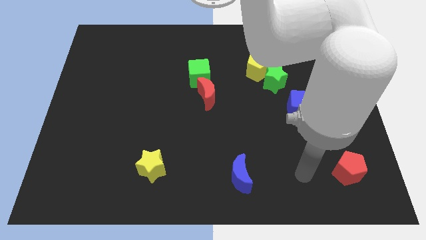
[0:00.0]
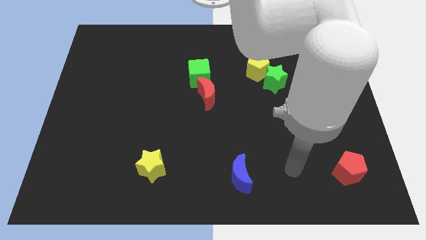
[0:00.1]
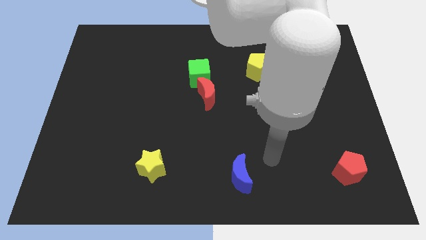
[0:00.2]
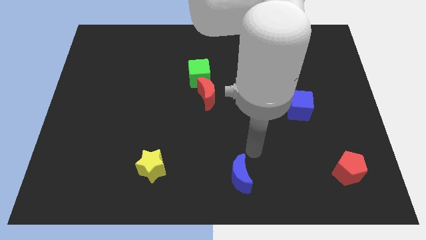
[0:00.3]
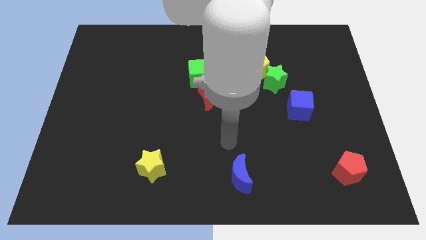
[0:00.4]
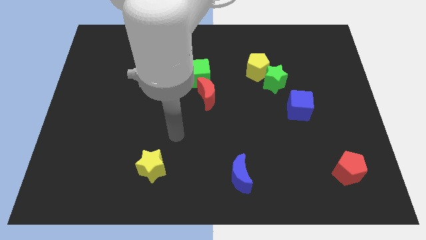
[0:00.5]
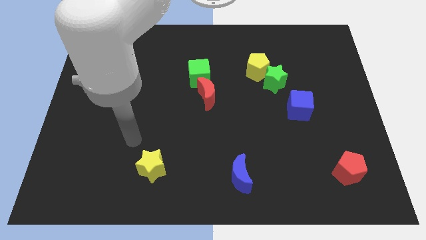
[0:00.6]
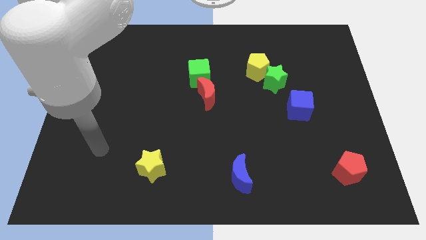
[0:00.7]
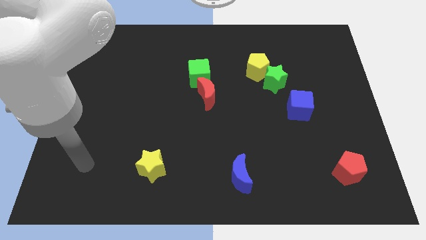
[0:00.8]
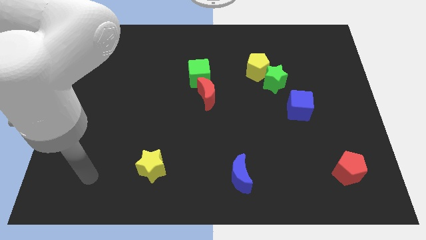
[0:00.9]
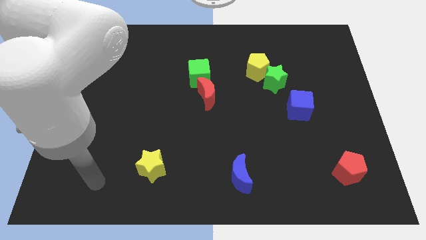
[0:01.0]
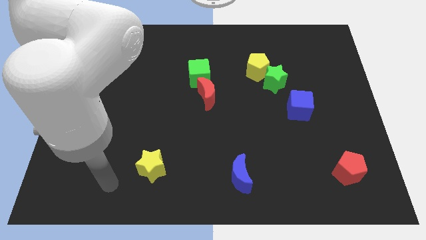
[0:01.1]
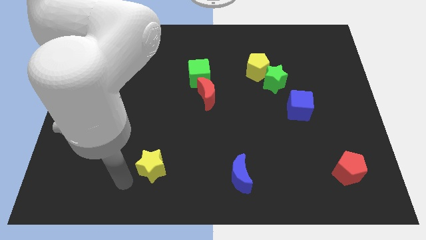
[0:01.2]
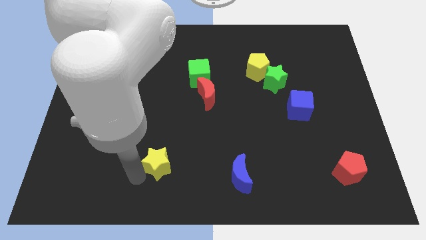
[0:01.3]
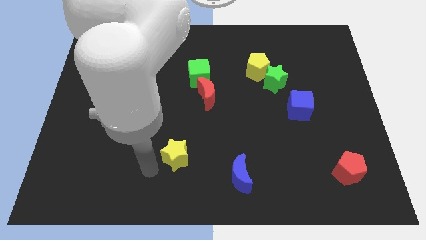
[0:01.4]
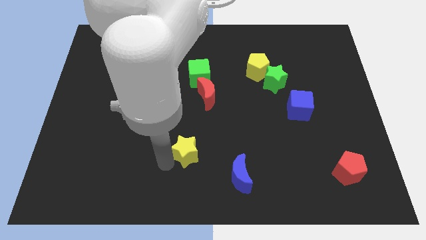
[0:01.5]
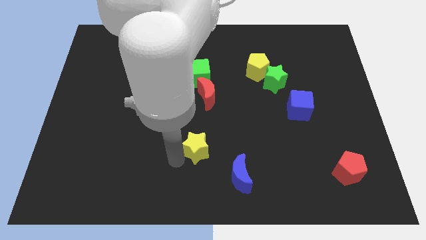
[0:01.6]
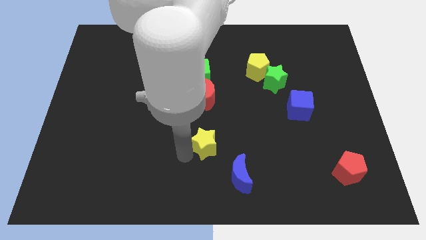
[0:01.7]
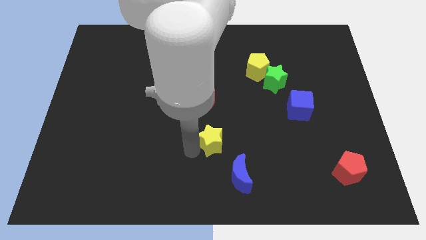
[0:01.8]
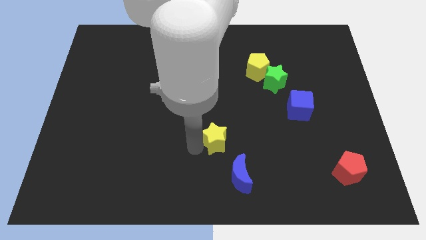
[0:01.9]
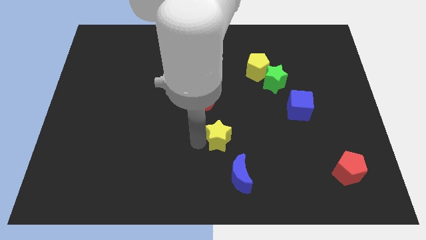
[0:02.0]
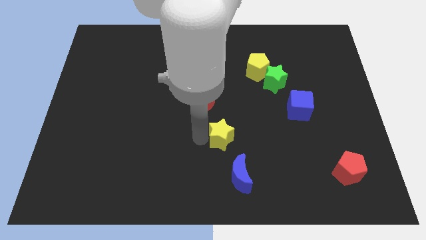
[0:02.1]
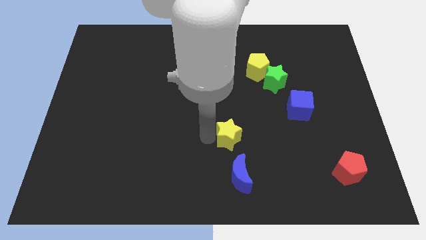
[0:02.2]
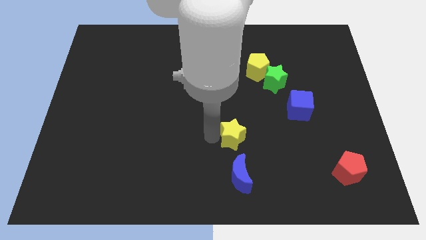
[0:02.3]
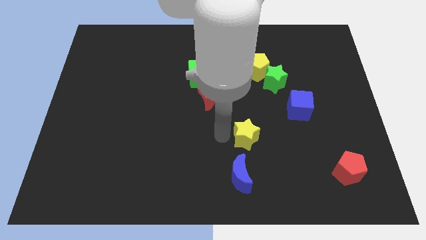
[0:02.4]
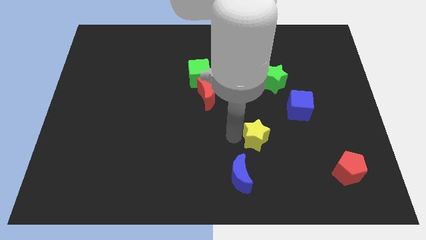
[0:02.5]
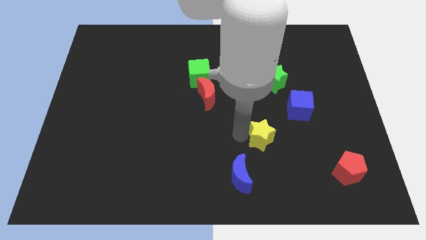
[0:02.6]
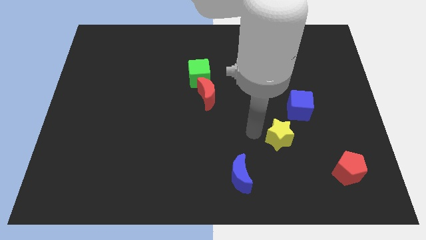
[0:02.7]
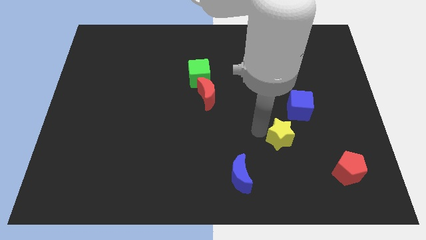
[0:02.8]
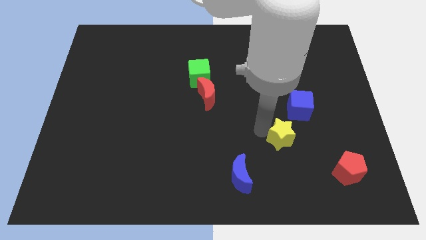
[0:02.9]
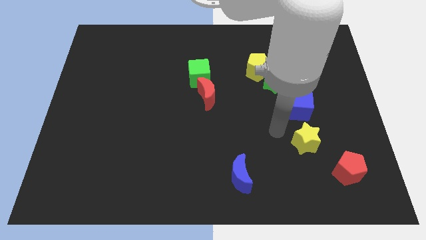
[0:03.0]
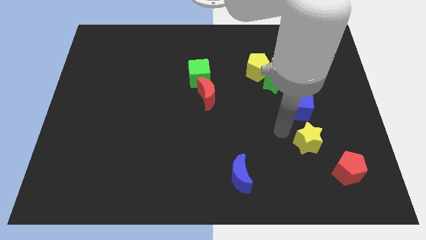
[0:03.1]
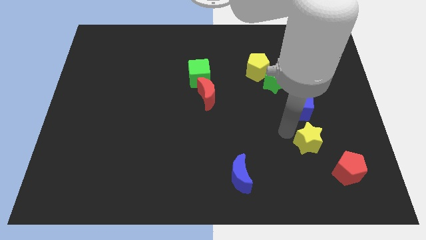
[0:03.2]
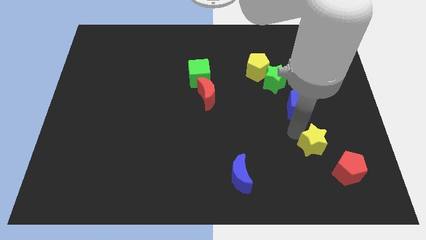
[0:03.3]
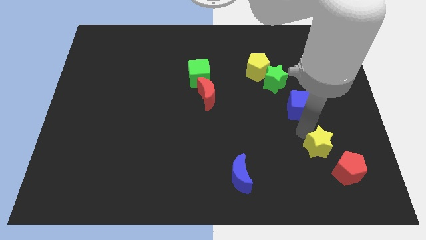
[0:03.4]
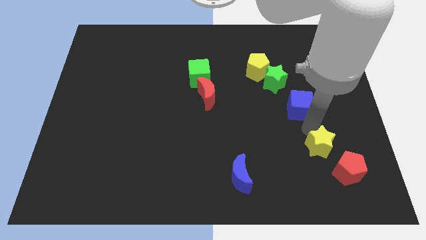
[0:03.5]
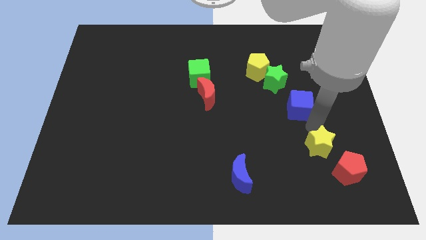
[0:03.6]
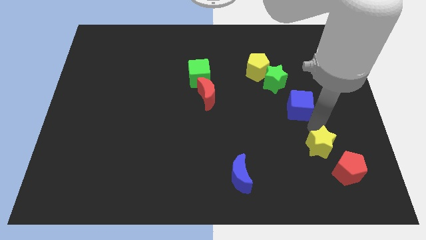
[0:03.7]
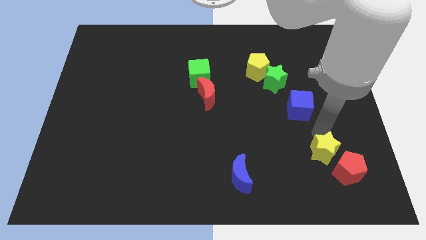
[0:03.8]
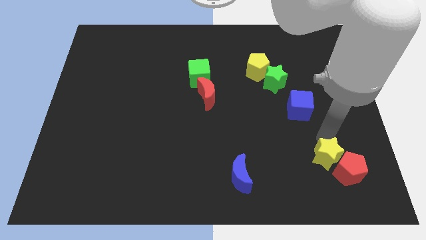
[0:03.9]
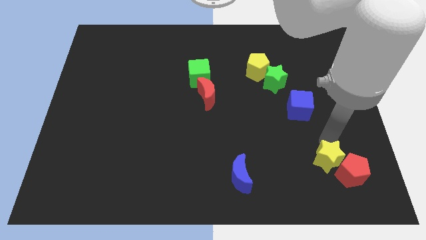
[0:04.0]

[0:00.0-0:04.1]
move the yellow star to the red pentagon

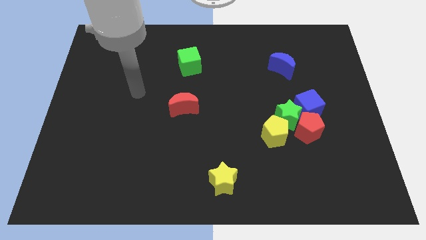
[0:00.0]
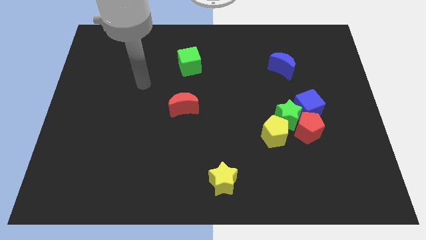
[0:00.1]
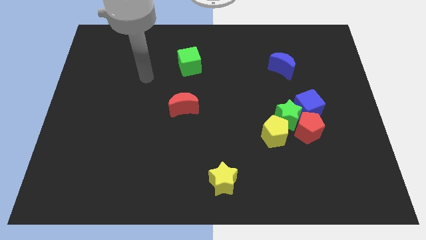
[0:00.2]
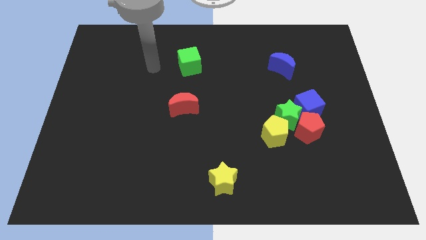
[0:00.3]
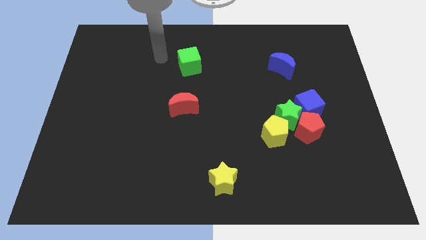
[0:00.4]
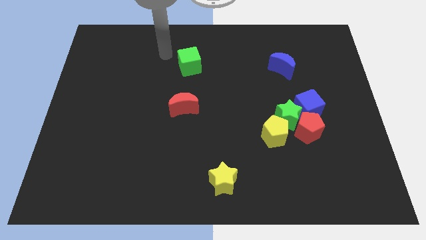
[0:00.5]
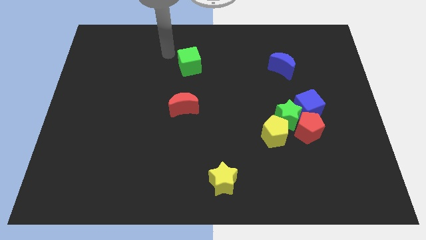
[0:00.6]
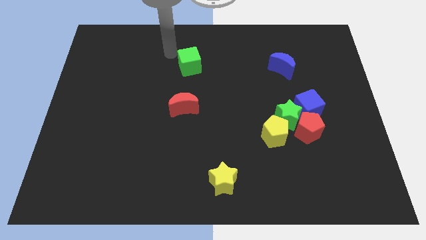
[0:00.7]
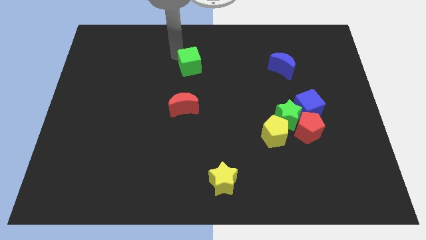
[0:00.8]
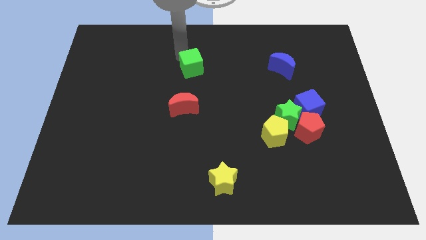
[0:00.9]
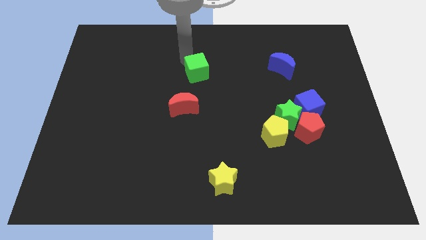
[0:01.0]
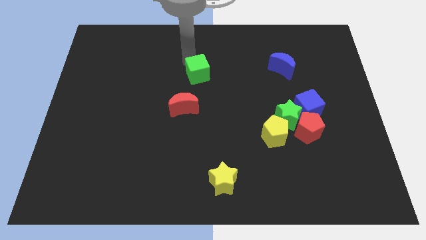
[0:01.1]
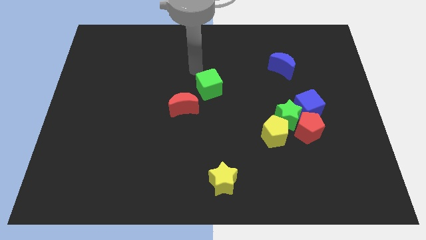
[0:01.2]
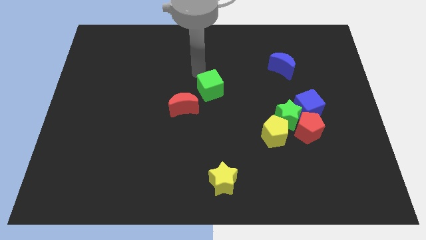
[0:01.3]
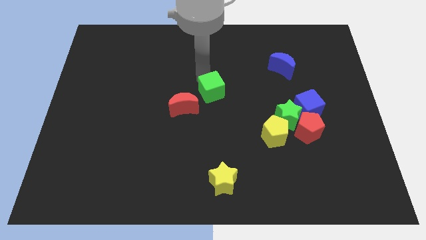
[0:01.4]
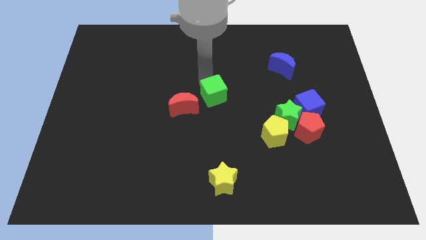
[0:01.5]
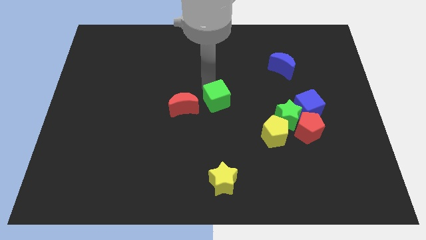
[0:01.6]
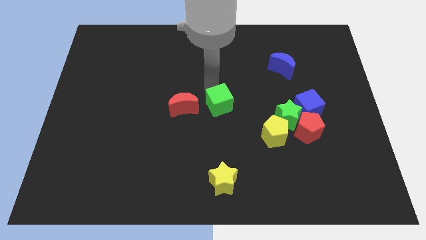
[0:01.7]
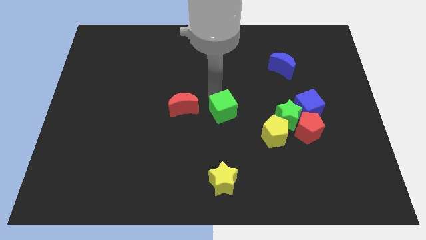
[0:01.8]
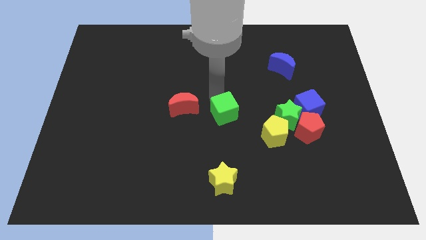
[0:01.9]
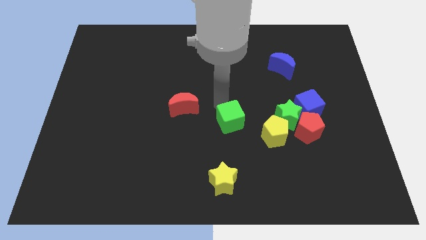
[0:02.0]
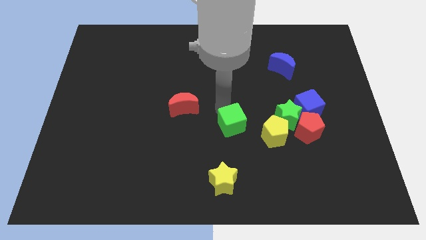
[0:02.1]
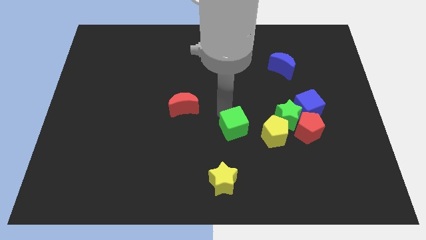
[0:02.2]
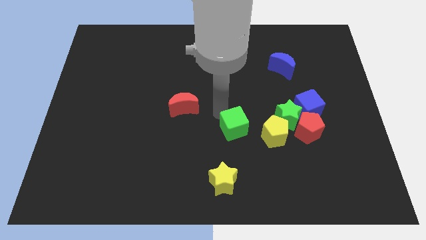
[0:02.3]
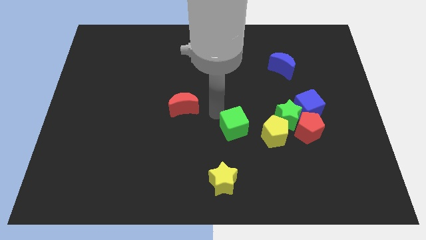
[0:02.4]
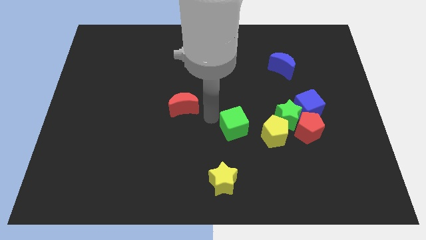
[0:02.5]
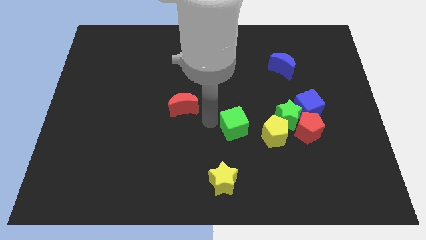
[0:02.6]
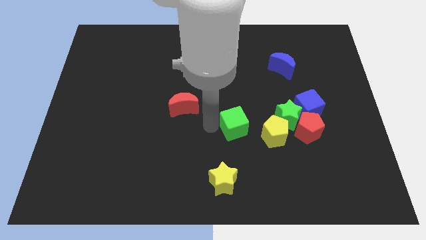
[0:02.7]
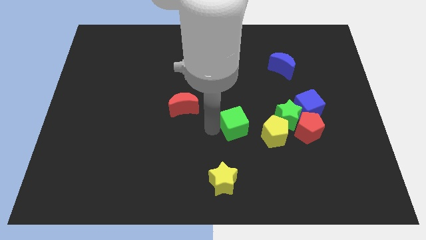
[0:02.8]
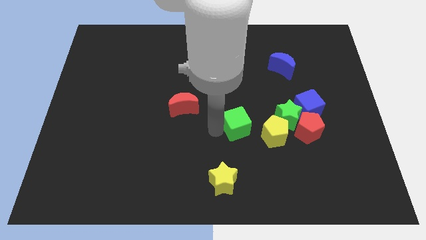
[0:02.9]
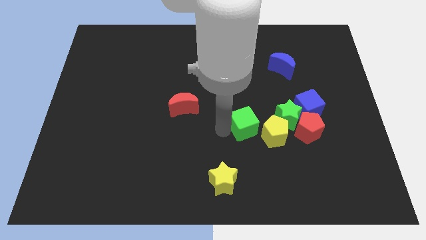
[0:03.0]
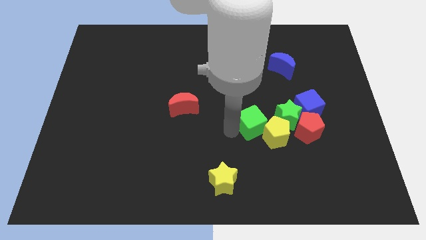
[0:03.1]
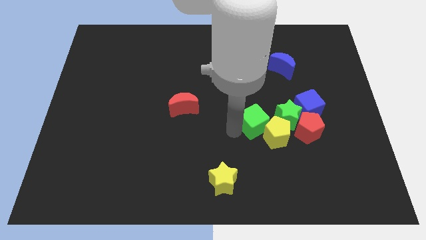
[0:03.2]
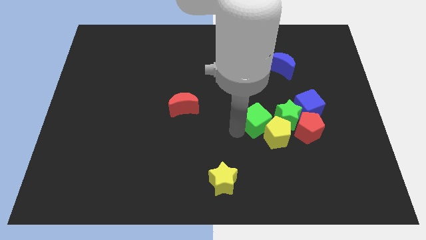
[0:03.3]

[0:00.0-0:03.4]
push the green cube to the yellow pentagon

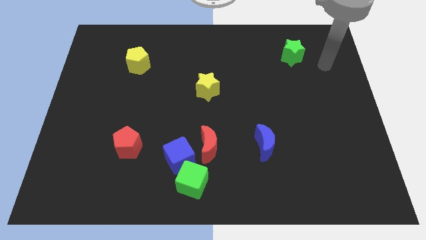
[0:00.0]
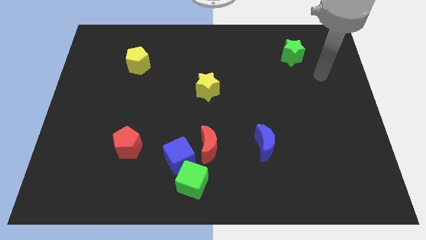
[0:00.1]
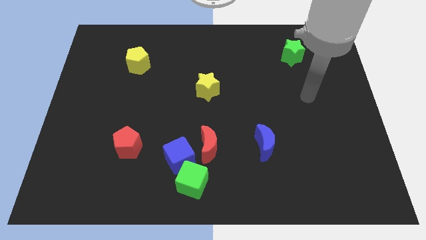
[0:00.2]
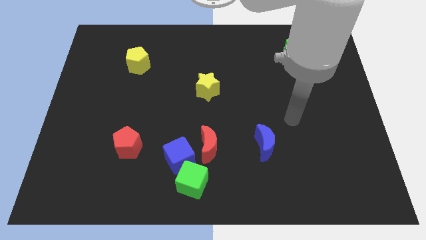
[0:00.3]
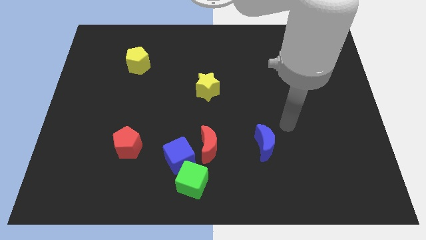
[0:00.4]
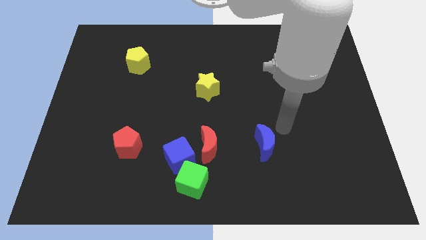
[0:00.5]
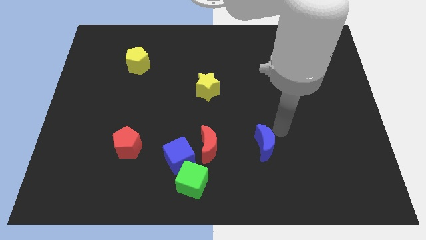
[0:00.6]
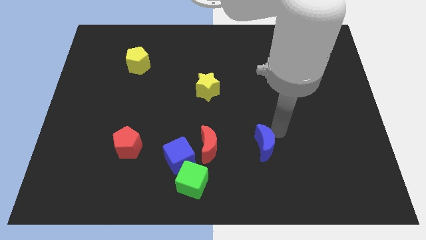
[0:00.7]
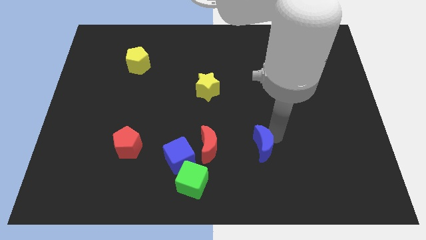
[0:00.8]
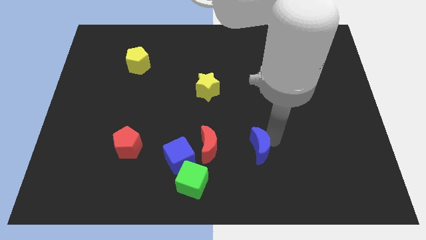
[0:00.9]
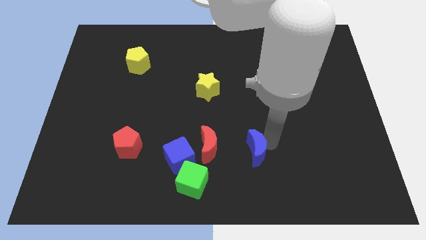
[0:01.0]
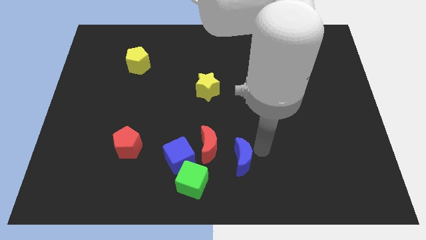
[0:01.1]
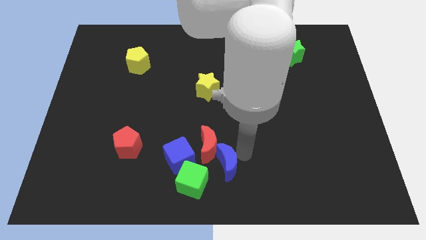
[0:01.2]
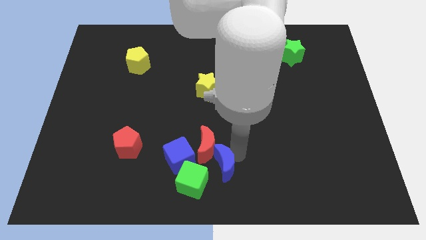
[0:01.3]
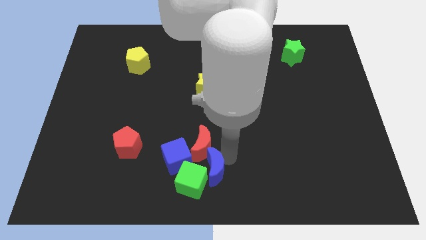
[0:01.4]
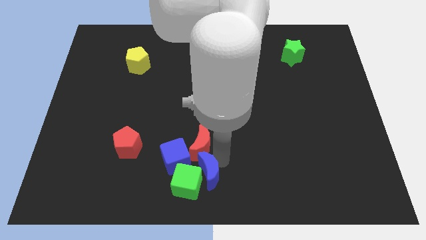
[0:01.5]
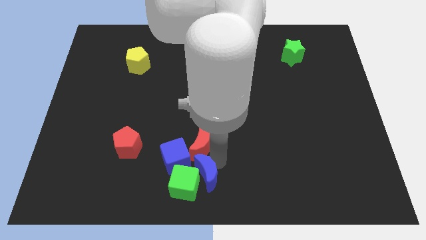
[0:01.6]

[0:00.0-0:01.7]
put the blue moon to the green cube
